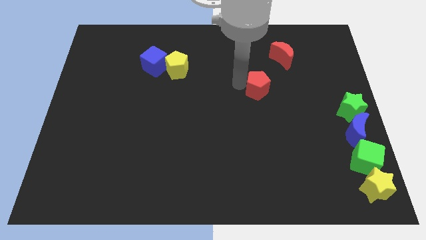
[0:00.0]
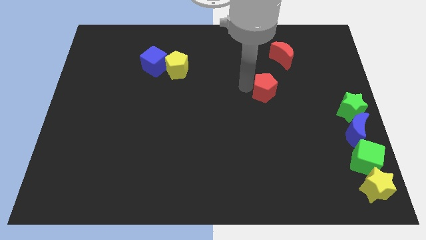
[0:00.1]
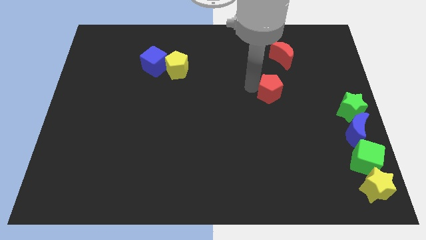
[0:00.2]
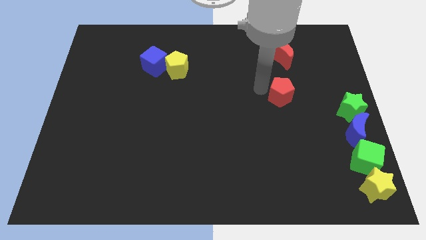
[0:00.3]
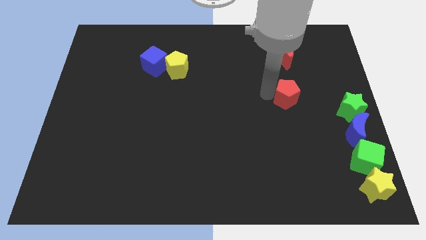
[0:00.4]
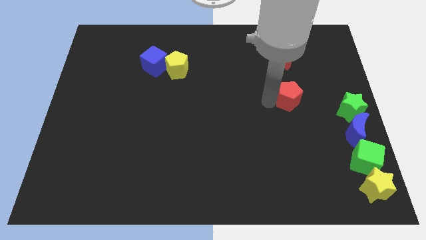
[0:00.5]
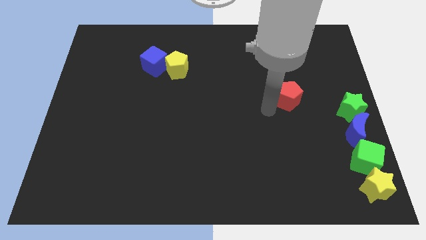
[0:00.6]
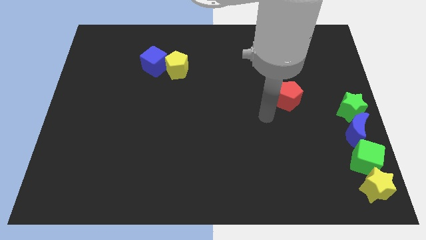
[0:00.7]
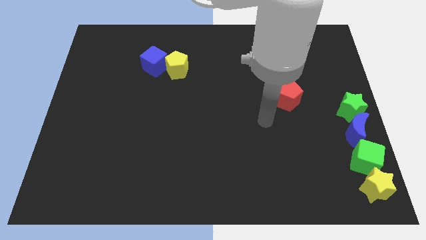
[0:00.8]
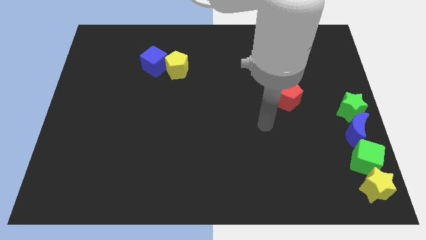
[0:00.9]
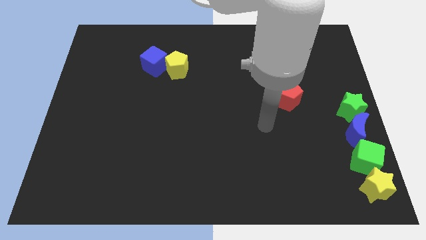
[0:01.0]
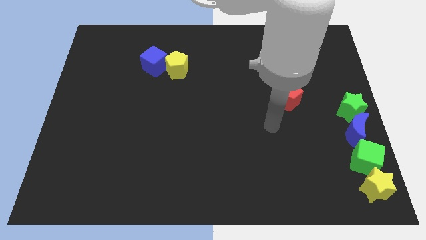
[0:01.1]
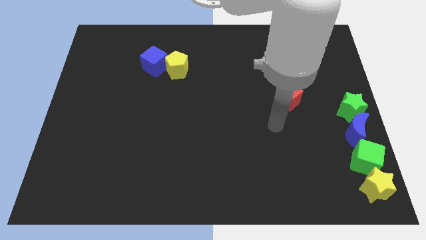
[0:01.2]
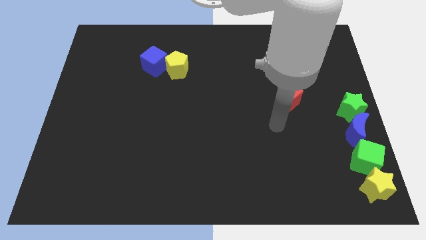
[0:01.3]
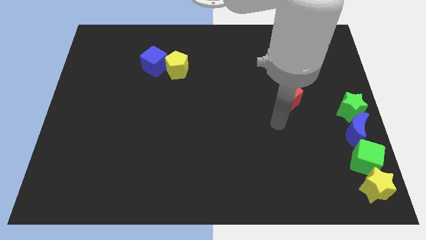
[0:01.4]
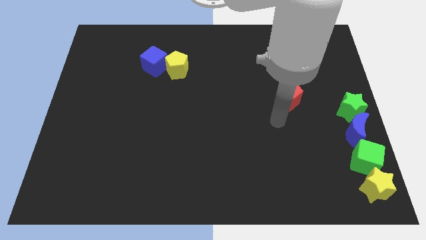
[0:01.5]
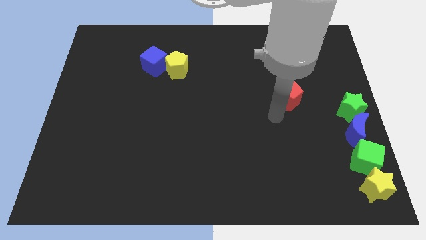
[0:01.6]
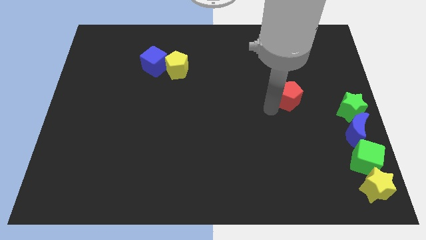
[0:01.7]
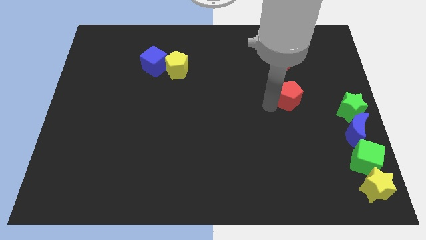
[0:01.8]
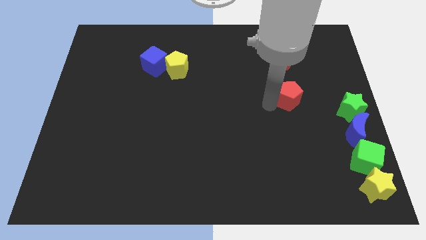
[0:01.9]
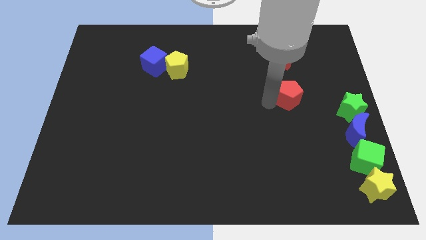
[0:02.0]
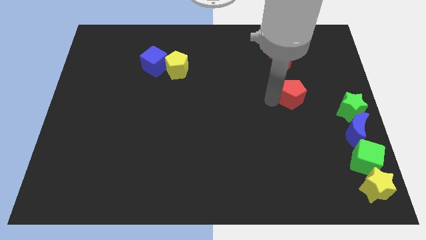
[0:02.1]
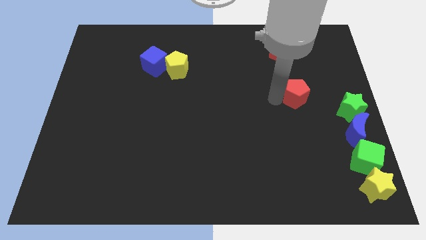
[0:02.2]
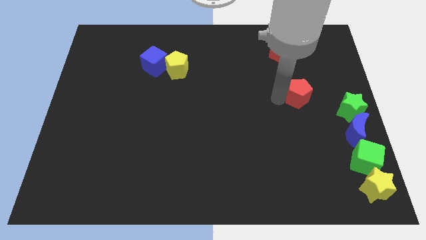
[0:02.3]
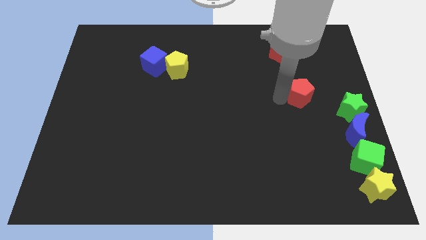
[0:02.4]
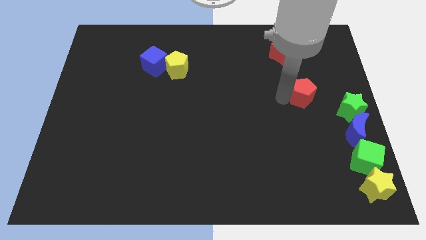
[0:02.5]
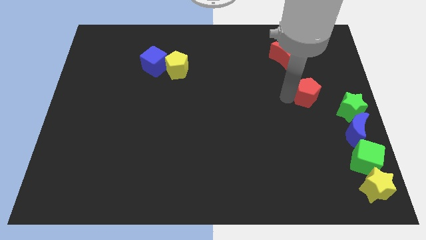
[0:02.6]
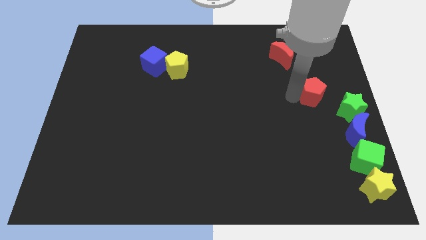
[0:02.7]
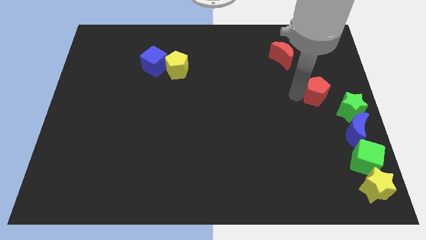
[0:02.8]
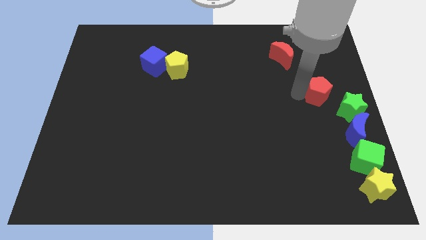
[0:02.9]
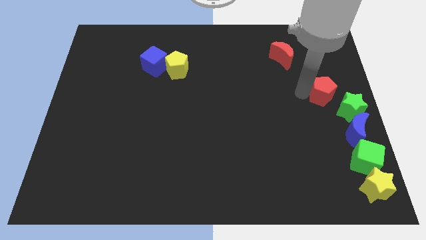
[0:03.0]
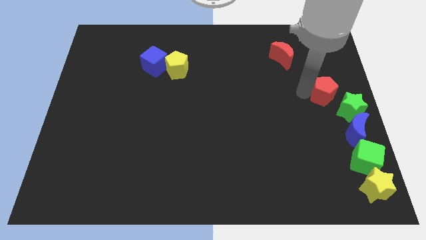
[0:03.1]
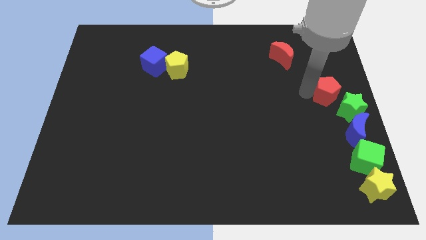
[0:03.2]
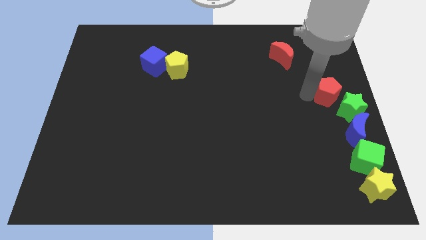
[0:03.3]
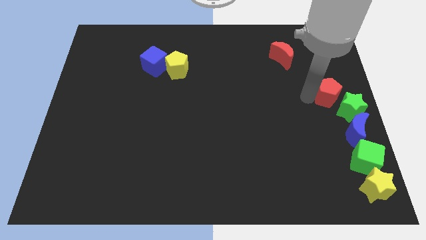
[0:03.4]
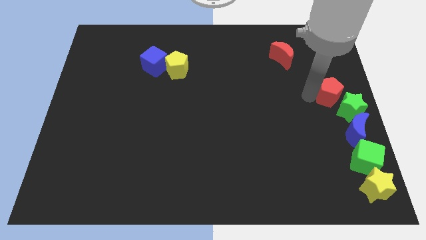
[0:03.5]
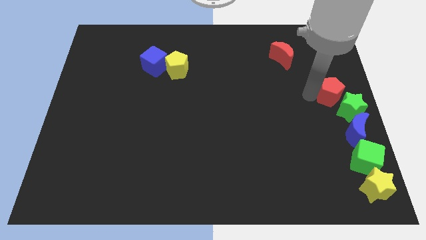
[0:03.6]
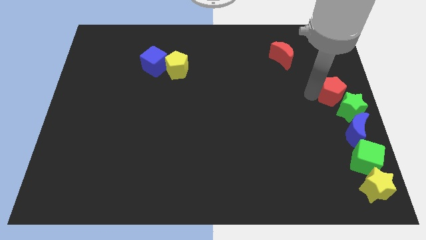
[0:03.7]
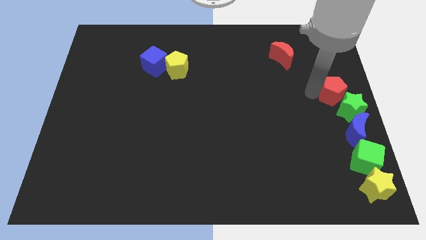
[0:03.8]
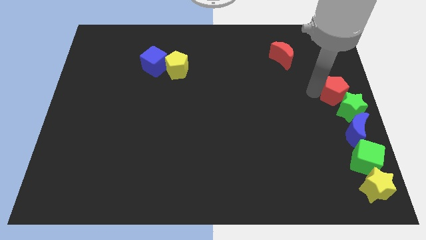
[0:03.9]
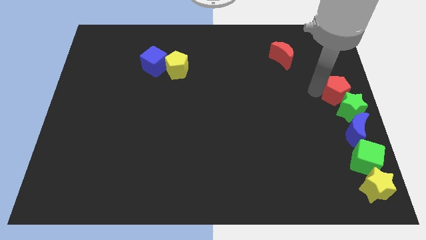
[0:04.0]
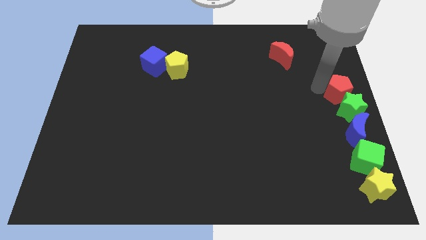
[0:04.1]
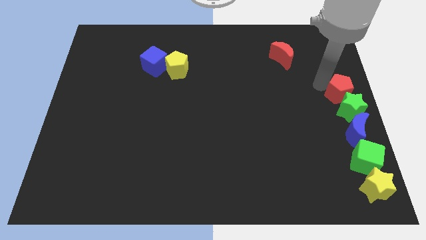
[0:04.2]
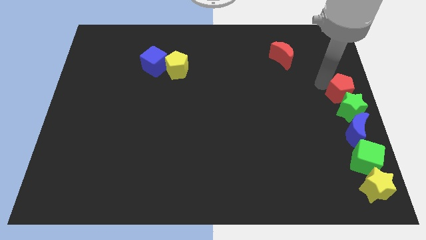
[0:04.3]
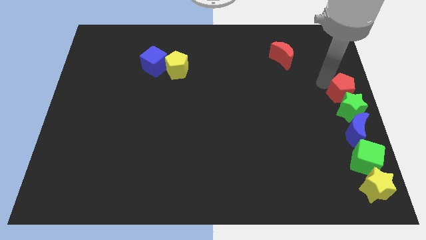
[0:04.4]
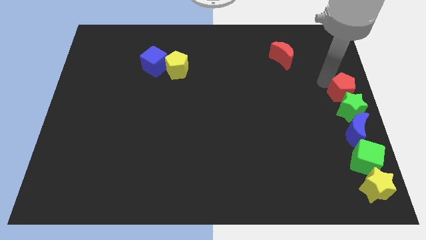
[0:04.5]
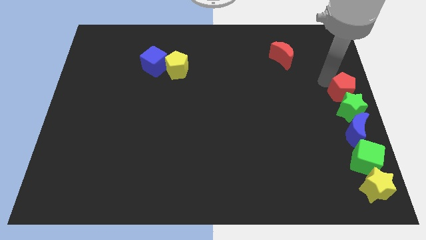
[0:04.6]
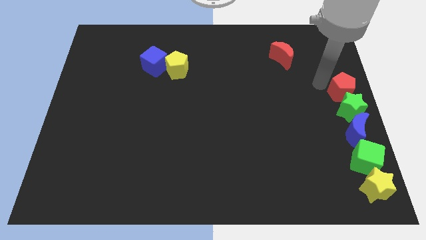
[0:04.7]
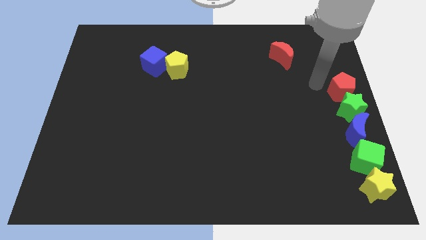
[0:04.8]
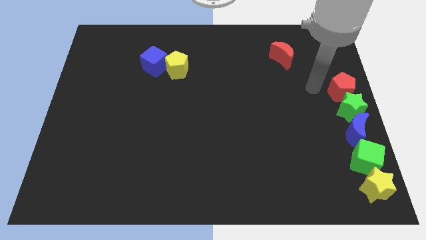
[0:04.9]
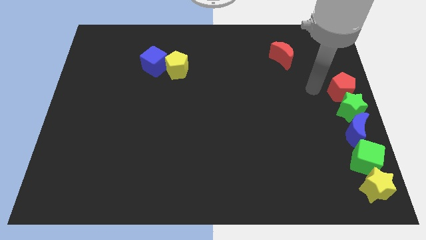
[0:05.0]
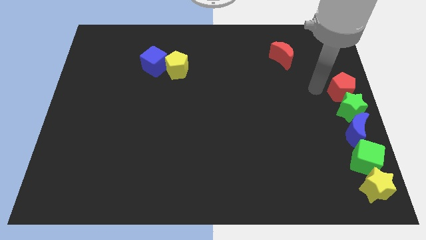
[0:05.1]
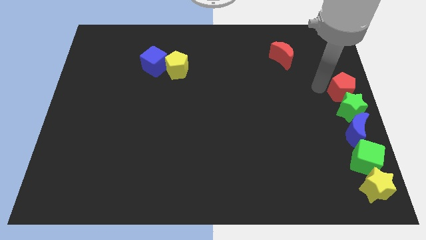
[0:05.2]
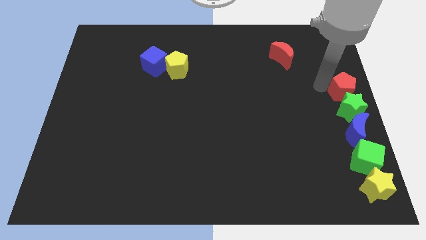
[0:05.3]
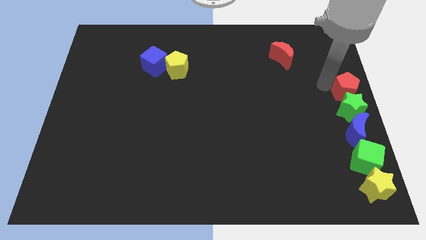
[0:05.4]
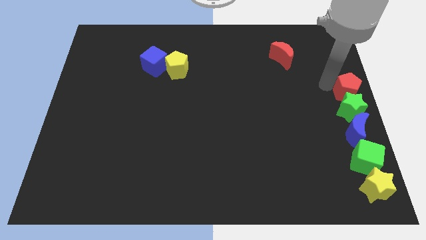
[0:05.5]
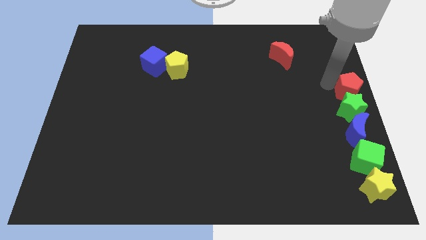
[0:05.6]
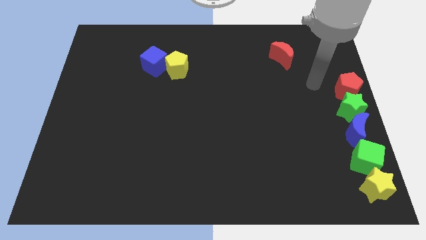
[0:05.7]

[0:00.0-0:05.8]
place red pentagon at the top of green star

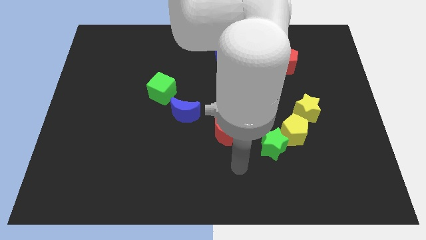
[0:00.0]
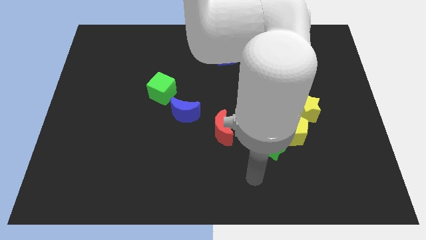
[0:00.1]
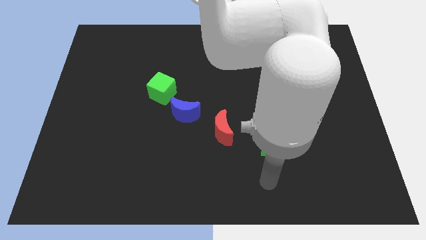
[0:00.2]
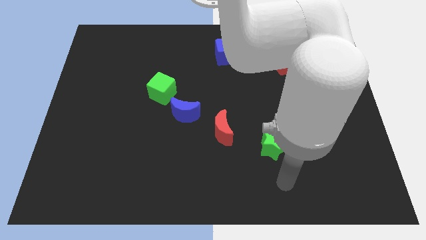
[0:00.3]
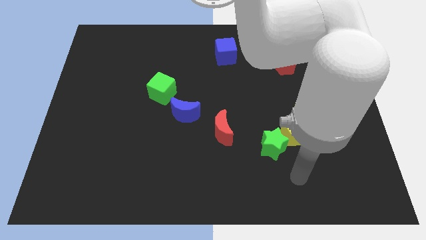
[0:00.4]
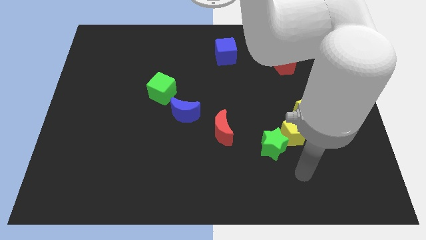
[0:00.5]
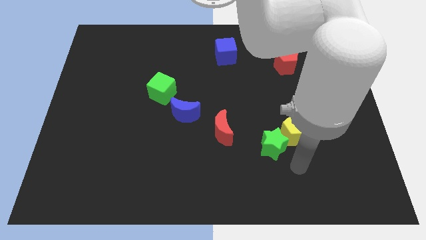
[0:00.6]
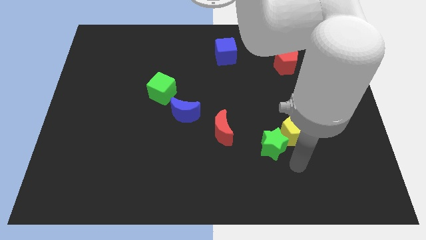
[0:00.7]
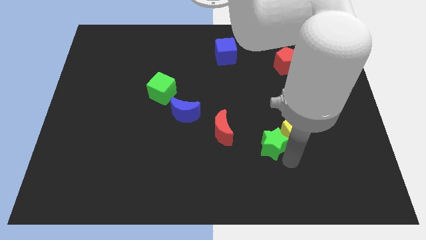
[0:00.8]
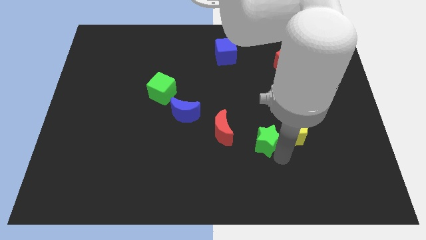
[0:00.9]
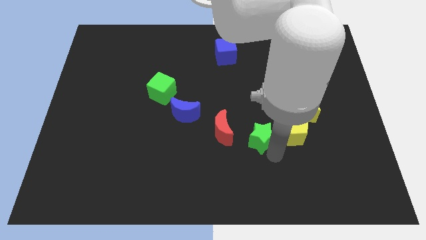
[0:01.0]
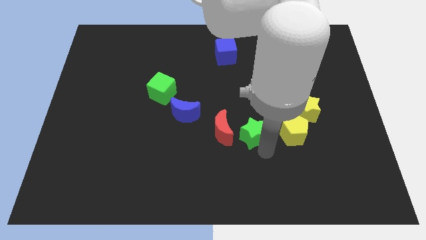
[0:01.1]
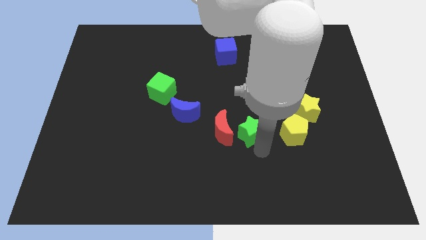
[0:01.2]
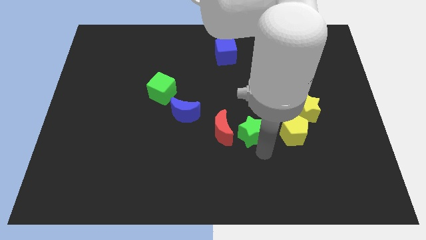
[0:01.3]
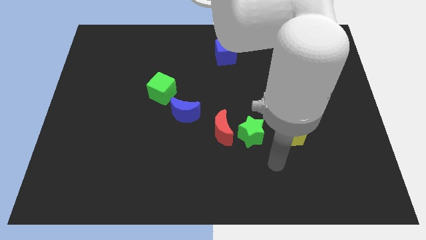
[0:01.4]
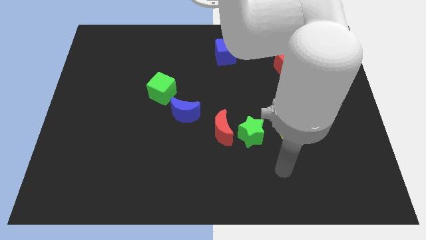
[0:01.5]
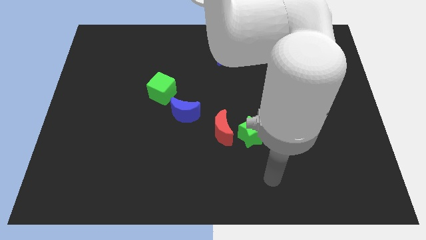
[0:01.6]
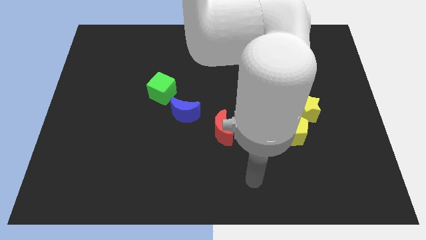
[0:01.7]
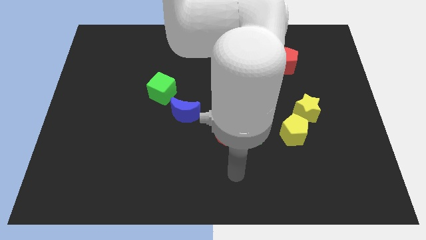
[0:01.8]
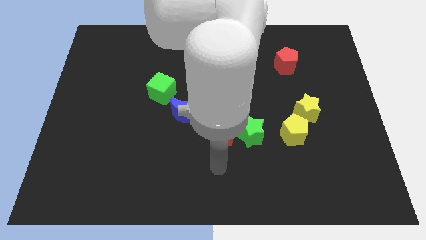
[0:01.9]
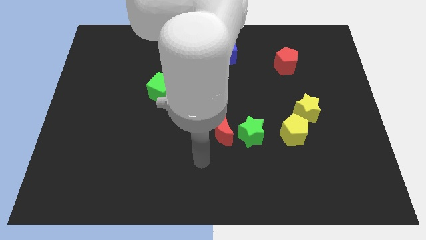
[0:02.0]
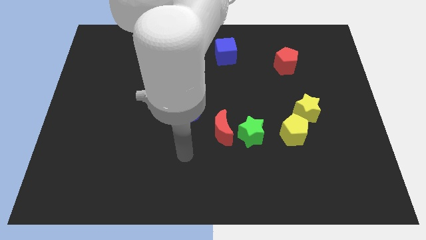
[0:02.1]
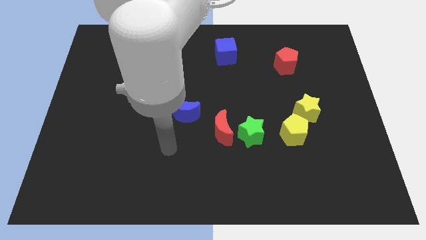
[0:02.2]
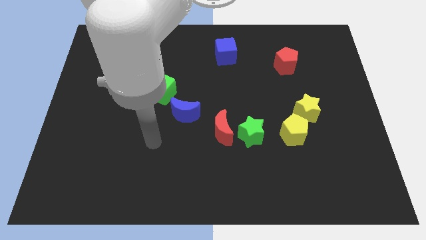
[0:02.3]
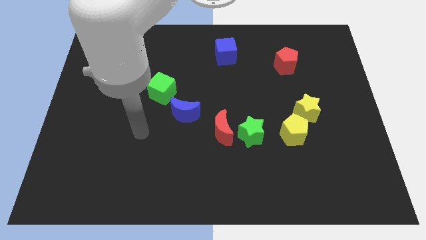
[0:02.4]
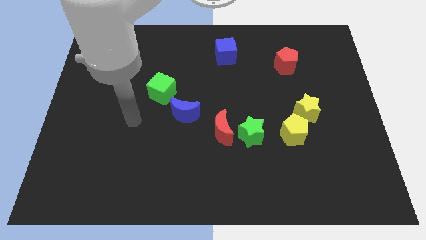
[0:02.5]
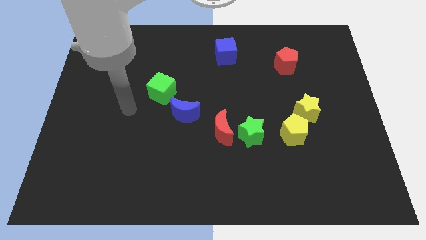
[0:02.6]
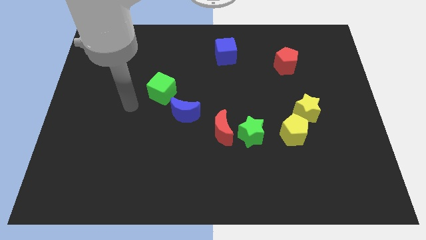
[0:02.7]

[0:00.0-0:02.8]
move green star right beside the red moon

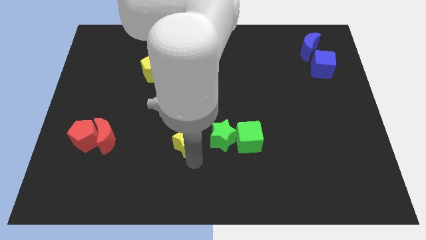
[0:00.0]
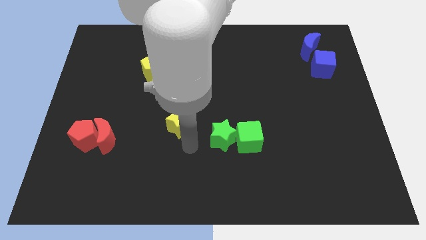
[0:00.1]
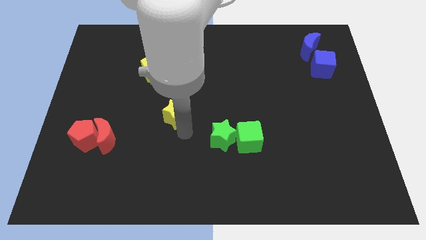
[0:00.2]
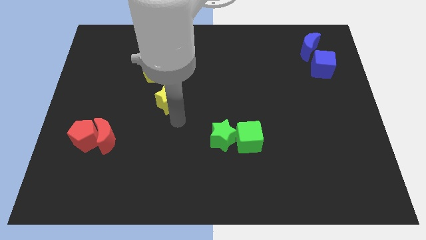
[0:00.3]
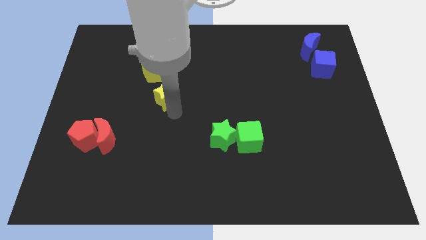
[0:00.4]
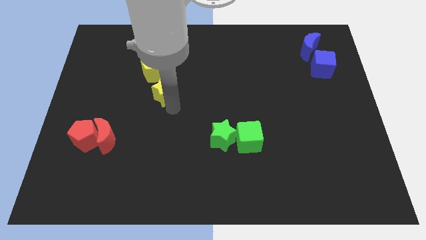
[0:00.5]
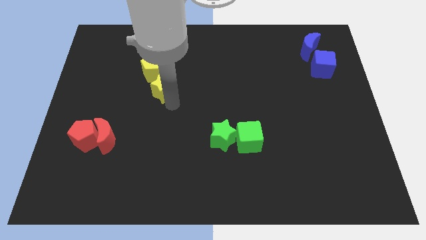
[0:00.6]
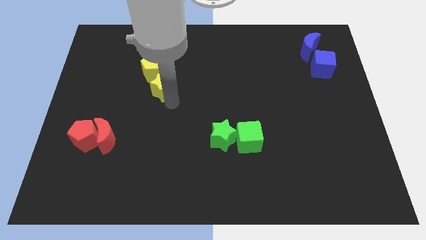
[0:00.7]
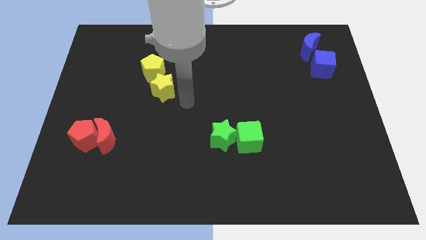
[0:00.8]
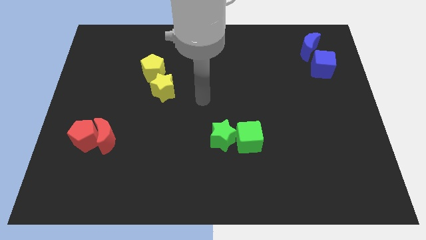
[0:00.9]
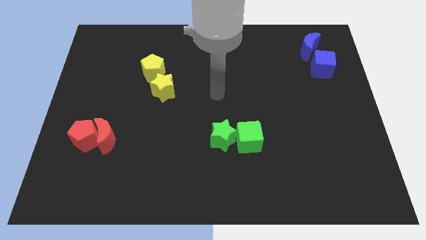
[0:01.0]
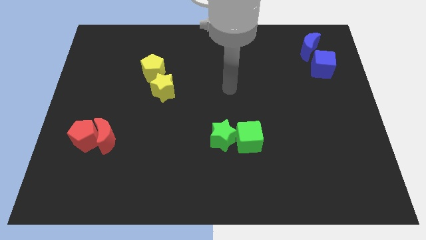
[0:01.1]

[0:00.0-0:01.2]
place the yellow star below the yellow pentagon
